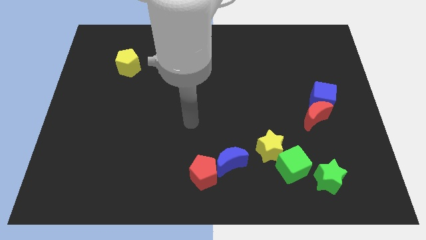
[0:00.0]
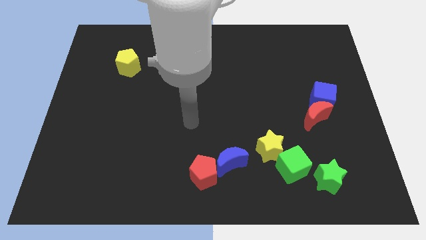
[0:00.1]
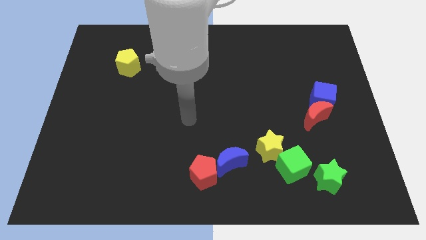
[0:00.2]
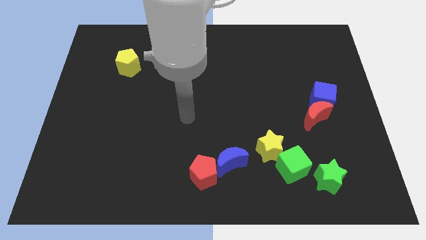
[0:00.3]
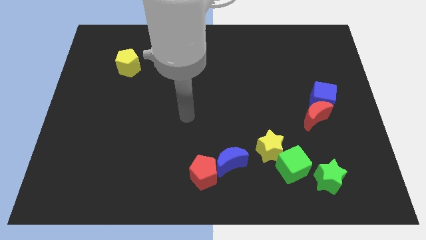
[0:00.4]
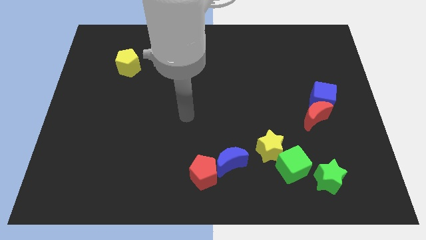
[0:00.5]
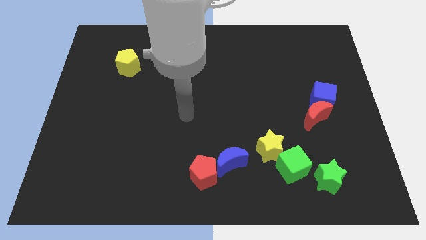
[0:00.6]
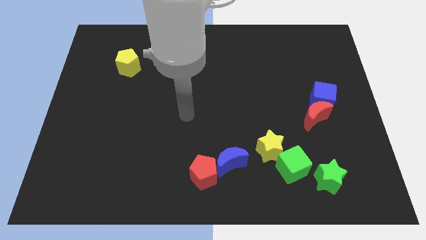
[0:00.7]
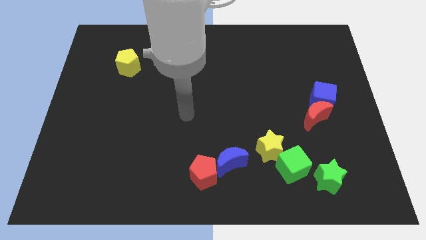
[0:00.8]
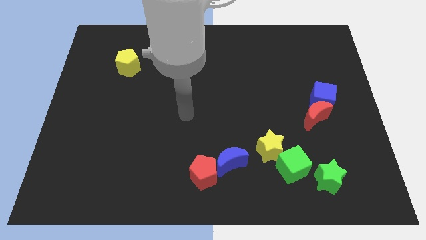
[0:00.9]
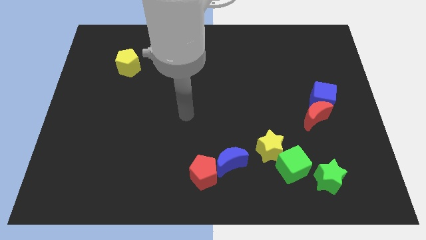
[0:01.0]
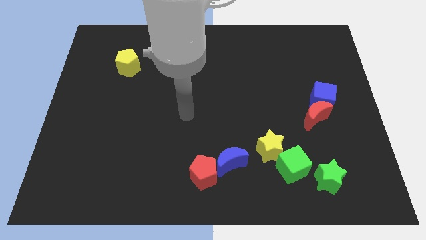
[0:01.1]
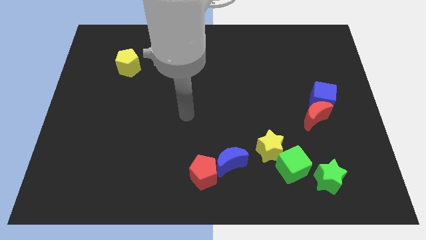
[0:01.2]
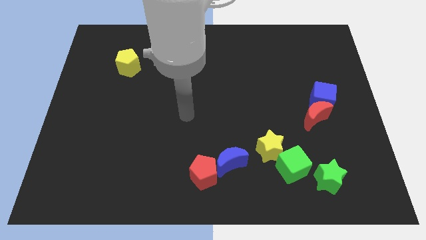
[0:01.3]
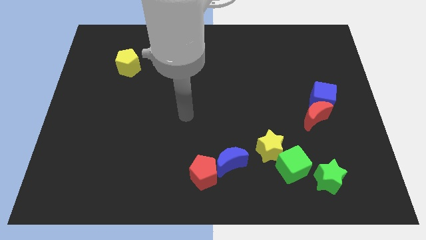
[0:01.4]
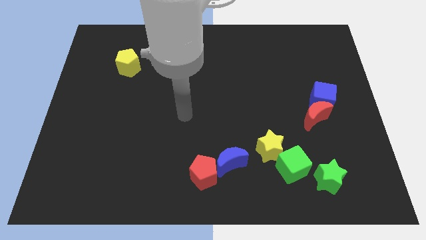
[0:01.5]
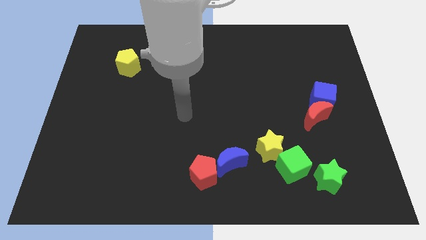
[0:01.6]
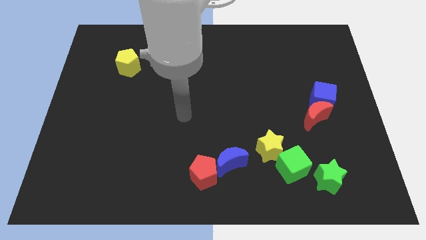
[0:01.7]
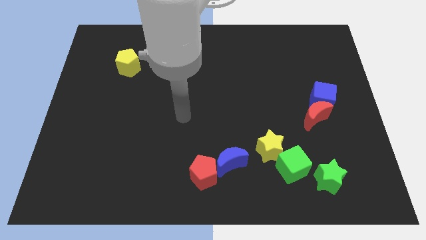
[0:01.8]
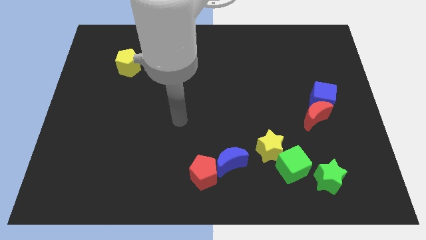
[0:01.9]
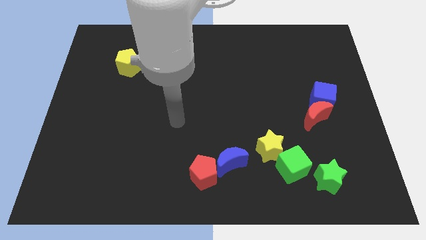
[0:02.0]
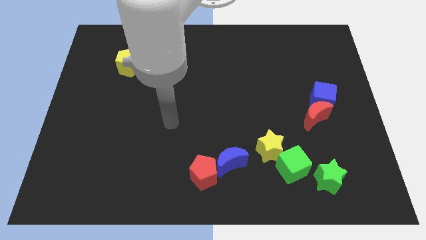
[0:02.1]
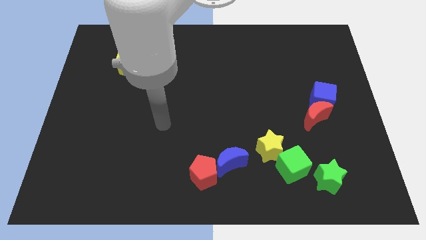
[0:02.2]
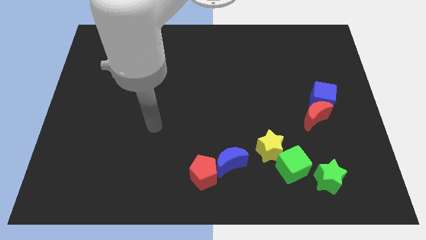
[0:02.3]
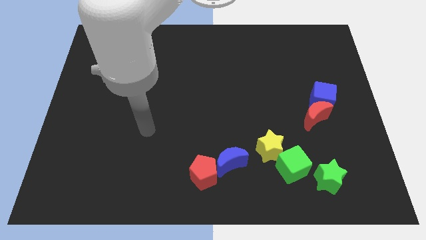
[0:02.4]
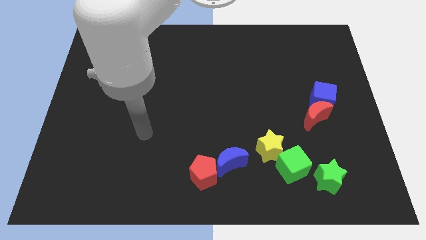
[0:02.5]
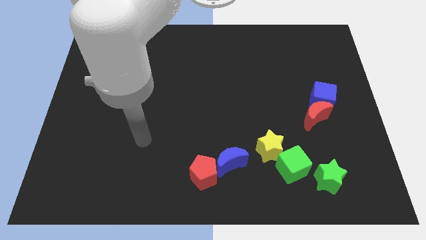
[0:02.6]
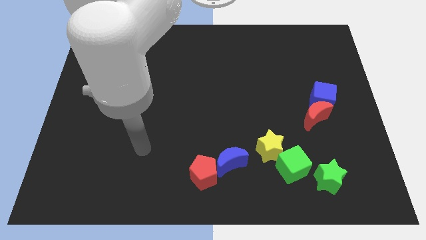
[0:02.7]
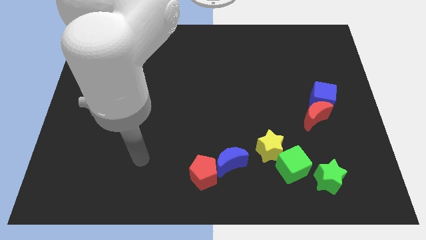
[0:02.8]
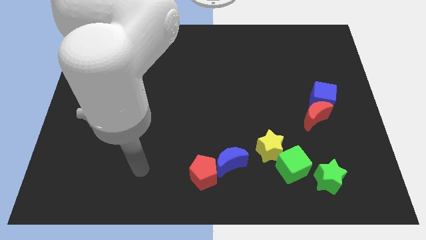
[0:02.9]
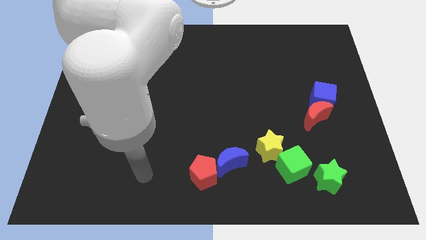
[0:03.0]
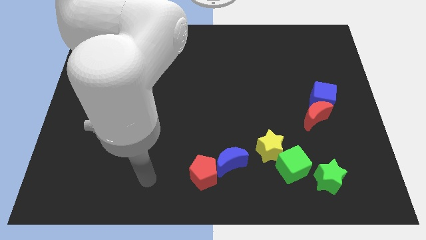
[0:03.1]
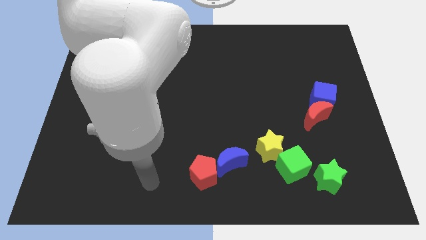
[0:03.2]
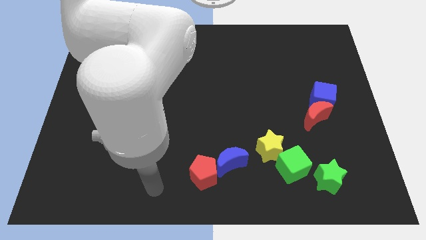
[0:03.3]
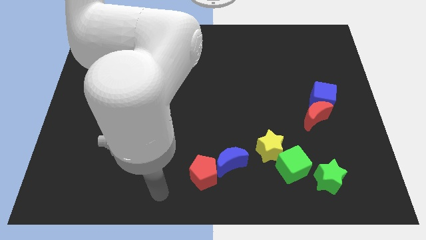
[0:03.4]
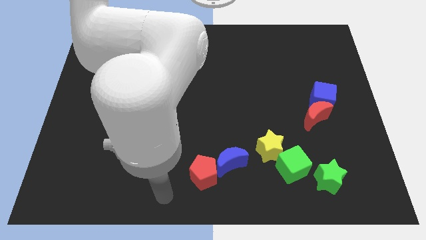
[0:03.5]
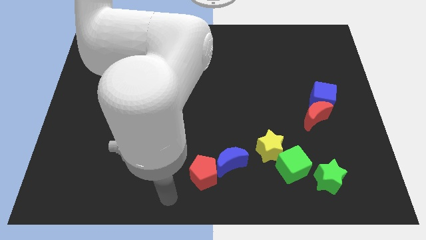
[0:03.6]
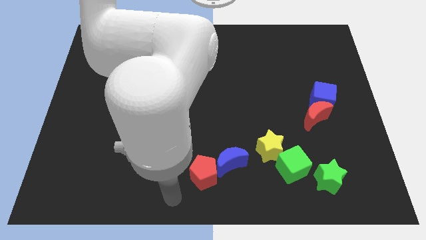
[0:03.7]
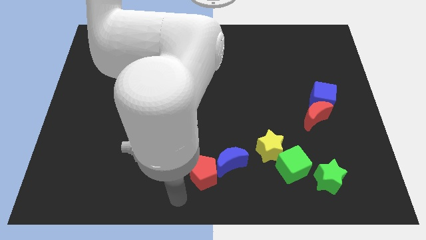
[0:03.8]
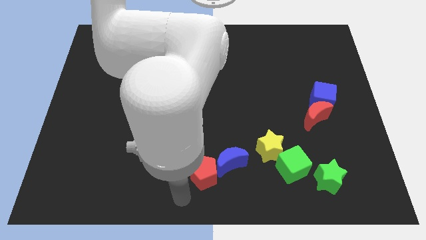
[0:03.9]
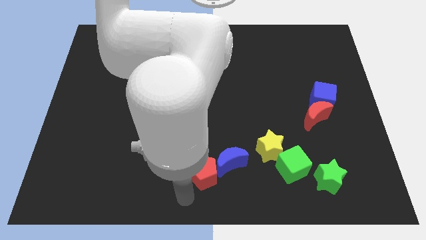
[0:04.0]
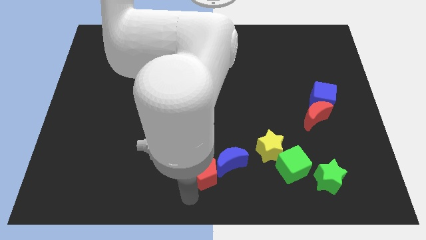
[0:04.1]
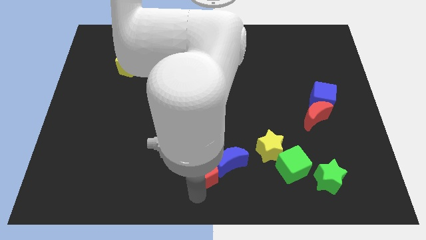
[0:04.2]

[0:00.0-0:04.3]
move the arm towards the red pentagon

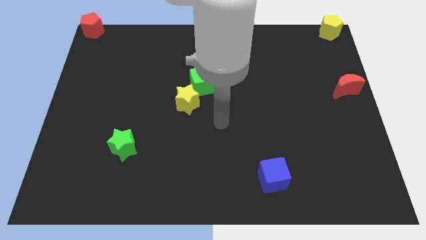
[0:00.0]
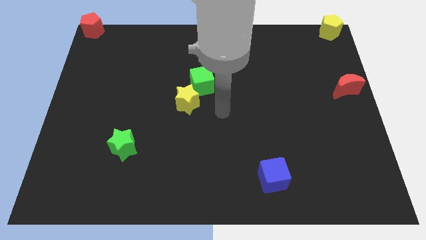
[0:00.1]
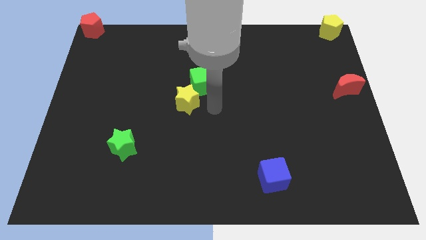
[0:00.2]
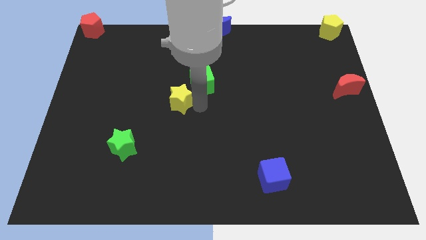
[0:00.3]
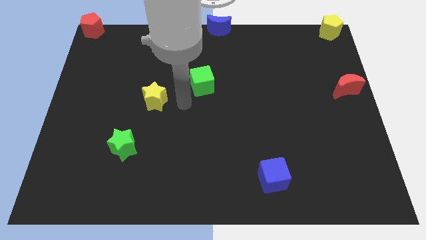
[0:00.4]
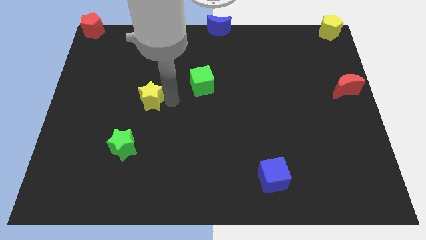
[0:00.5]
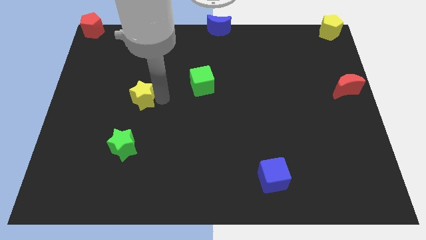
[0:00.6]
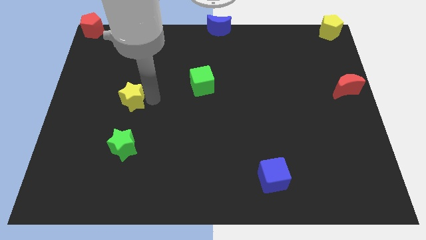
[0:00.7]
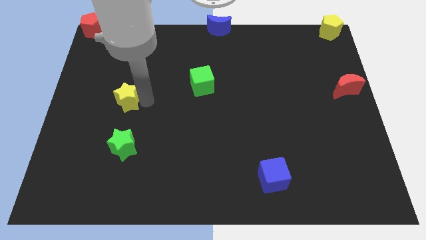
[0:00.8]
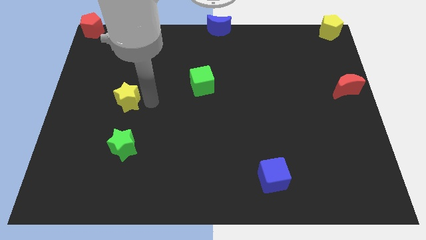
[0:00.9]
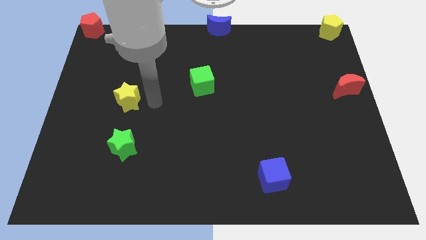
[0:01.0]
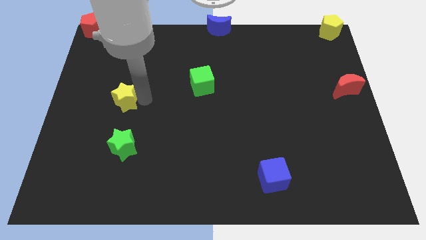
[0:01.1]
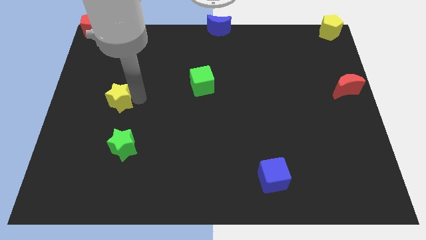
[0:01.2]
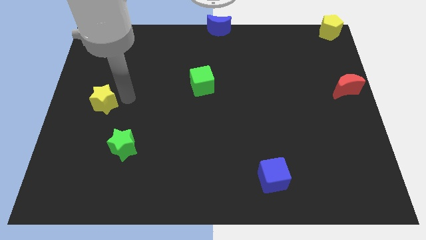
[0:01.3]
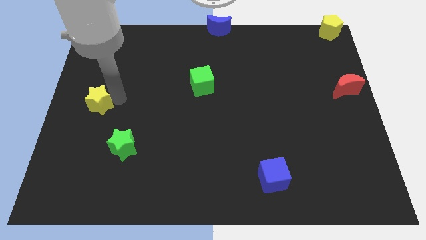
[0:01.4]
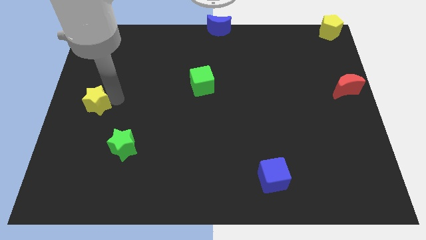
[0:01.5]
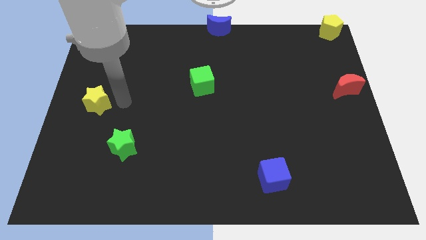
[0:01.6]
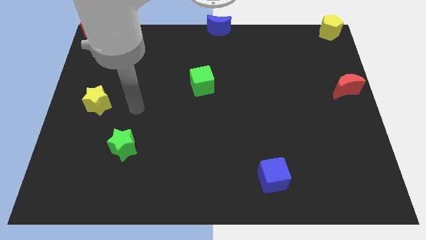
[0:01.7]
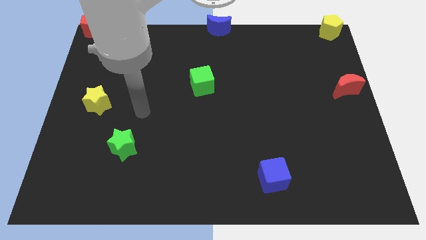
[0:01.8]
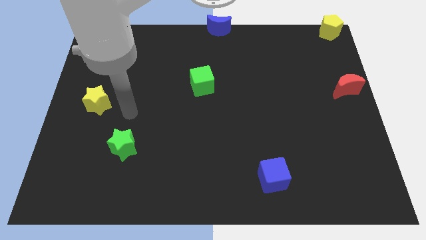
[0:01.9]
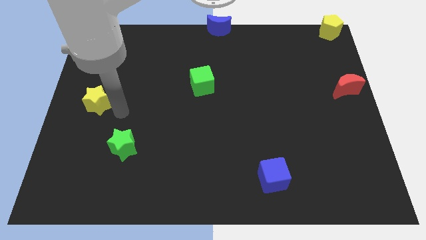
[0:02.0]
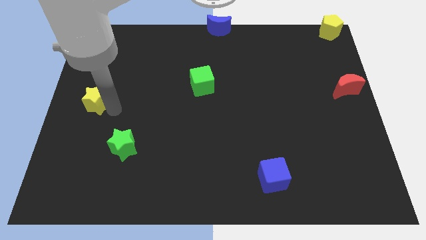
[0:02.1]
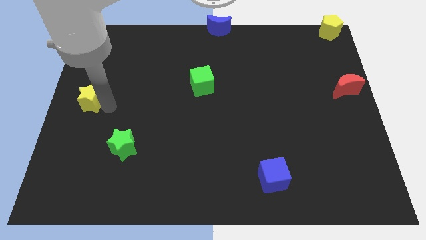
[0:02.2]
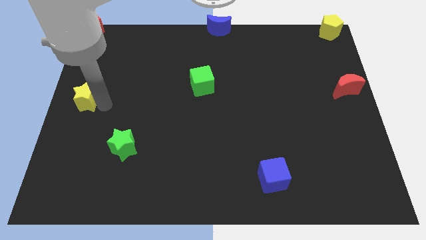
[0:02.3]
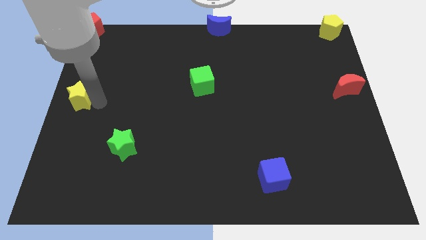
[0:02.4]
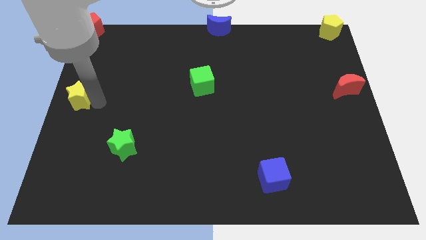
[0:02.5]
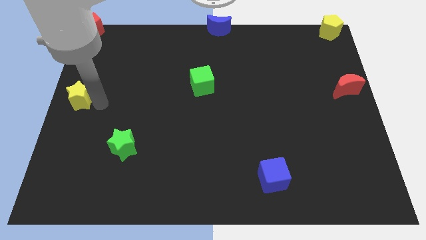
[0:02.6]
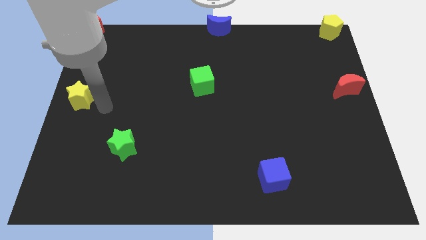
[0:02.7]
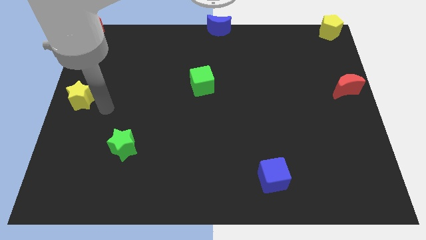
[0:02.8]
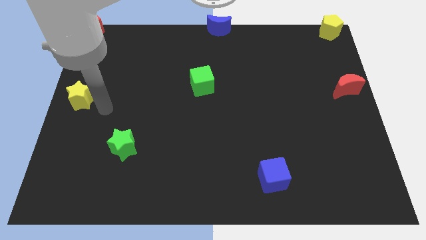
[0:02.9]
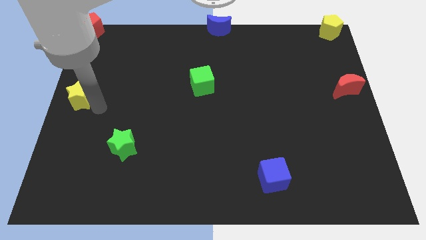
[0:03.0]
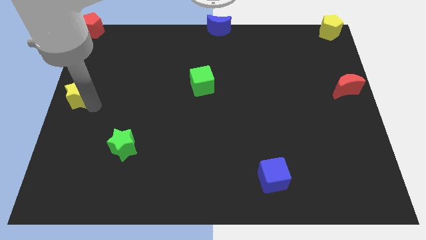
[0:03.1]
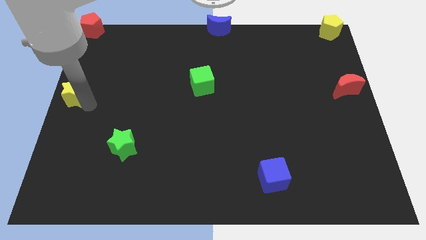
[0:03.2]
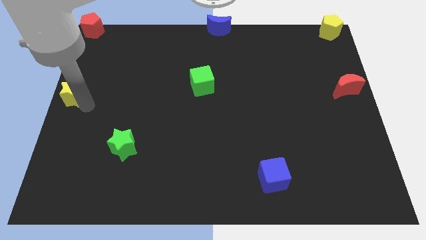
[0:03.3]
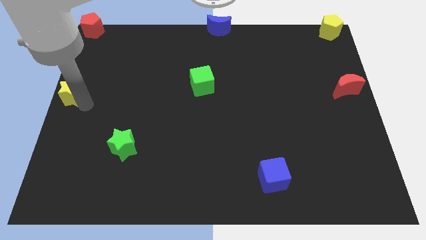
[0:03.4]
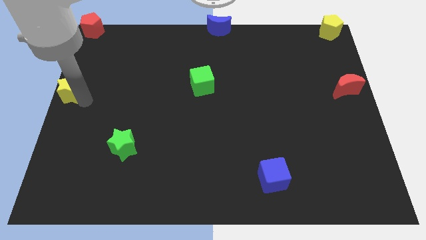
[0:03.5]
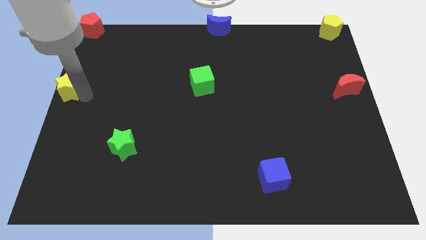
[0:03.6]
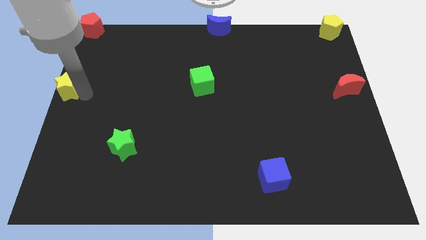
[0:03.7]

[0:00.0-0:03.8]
place yellow star at the left center of the board

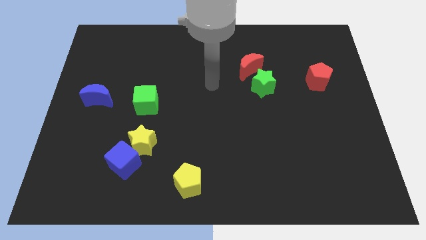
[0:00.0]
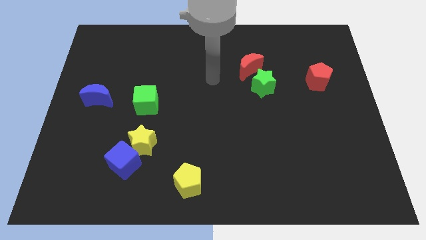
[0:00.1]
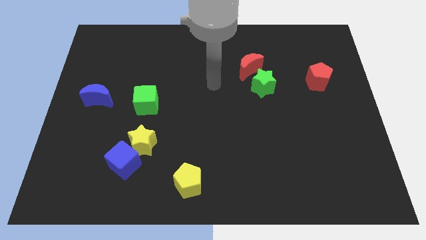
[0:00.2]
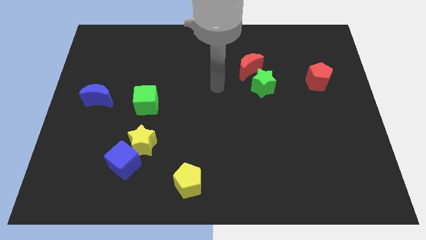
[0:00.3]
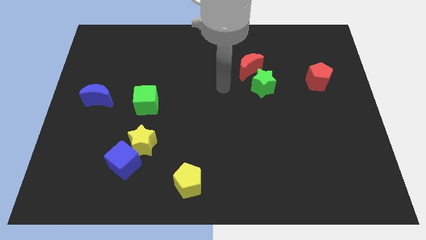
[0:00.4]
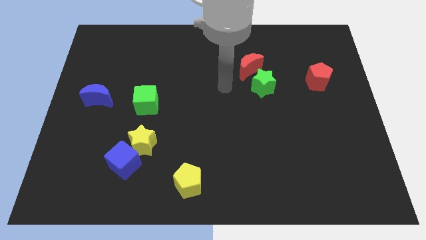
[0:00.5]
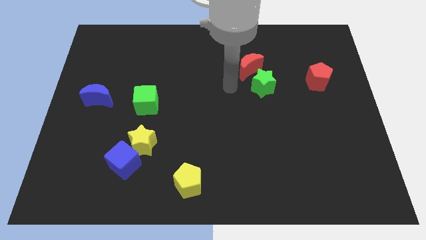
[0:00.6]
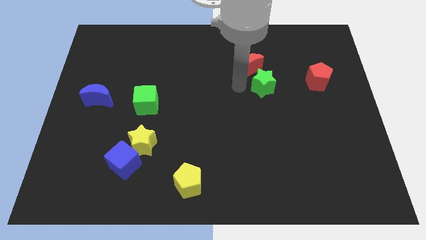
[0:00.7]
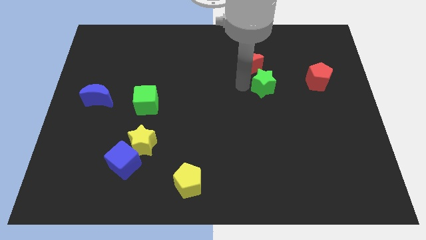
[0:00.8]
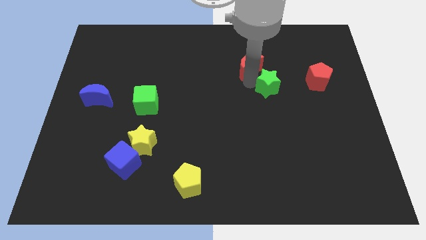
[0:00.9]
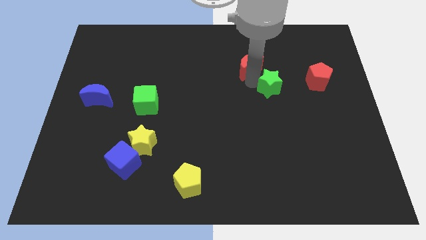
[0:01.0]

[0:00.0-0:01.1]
push the green star slightly to the right
